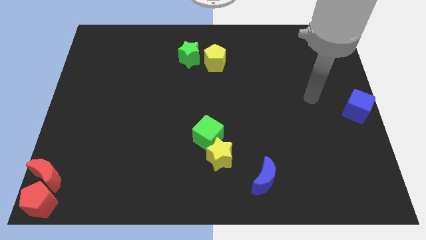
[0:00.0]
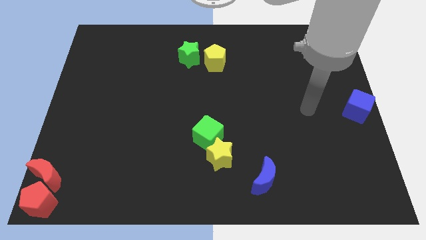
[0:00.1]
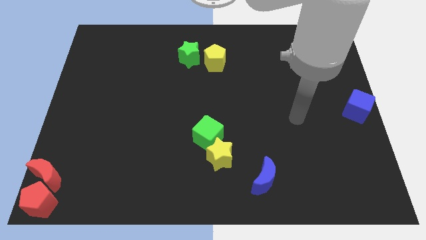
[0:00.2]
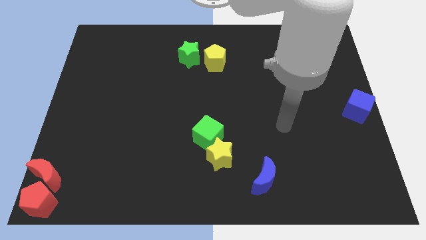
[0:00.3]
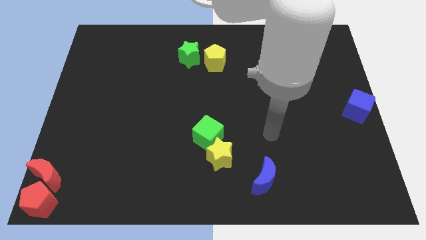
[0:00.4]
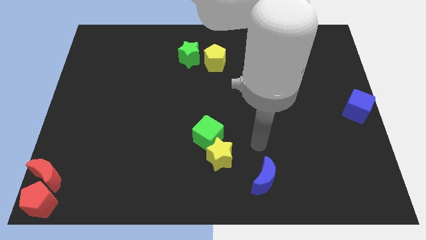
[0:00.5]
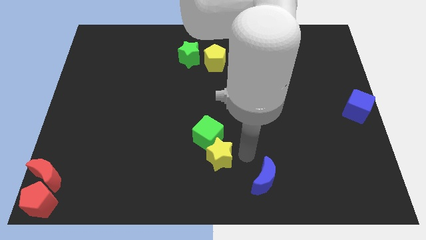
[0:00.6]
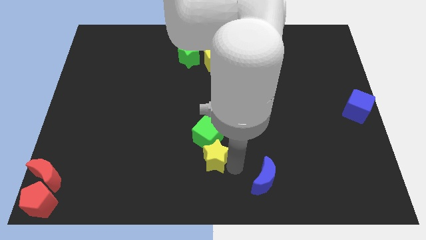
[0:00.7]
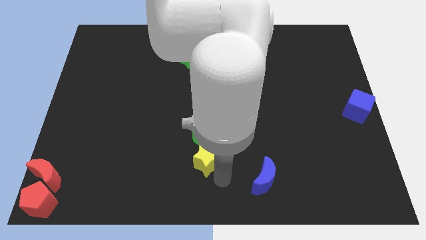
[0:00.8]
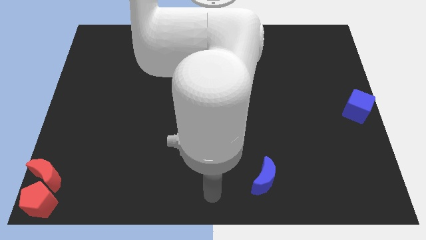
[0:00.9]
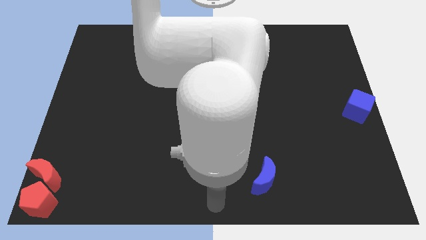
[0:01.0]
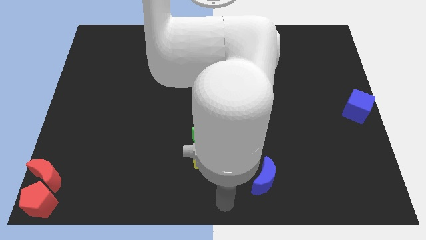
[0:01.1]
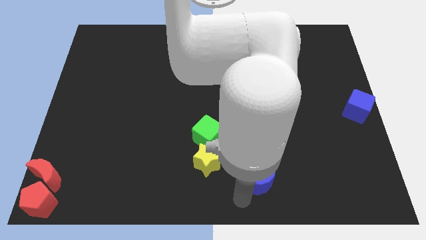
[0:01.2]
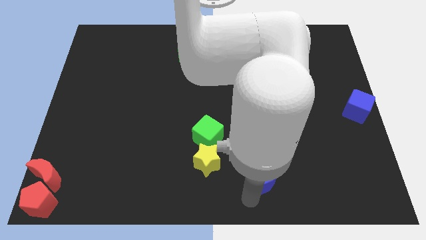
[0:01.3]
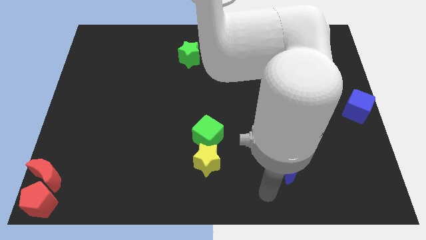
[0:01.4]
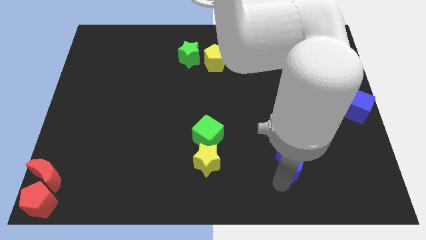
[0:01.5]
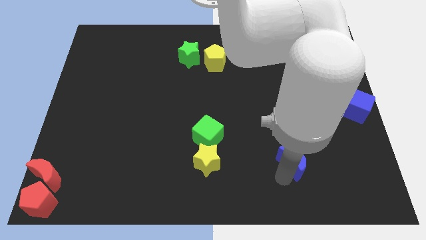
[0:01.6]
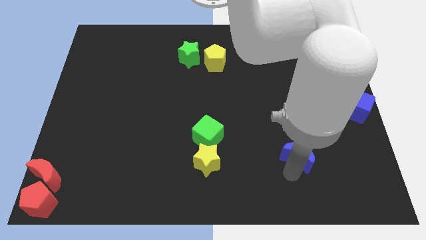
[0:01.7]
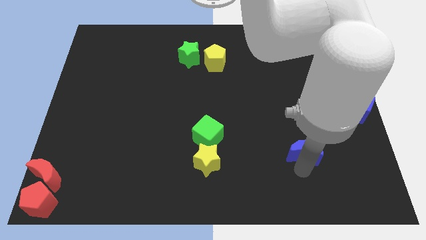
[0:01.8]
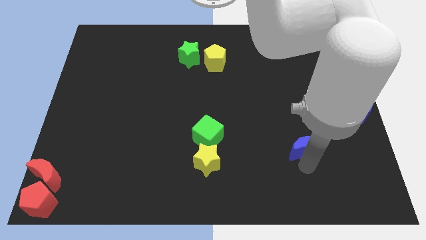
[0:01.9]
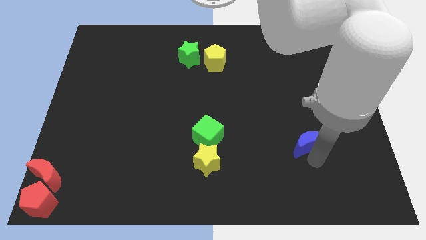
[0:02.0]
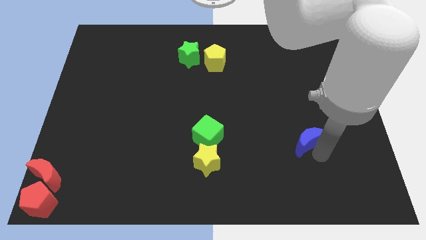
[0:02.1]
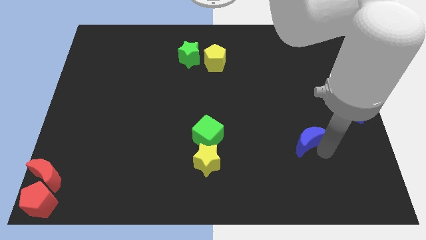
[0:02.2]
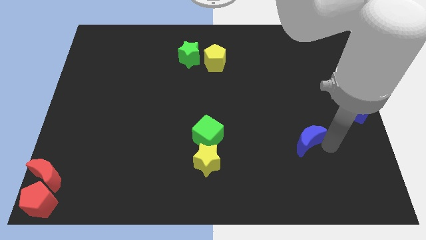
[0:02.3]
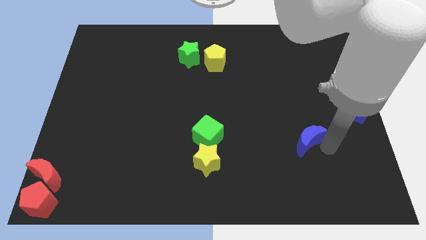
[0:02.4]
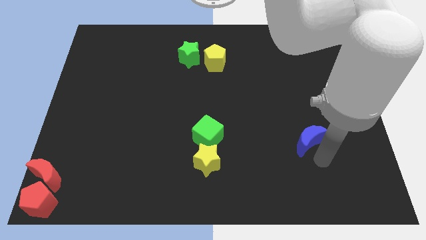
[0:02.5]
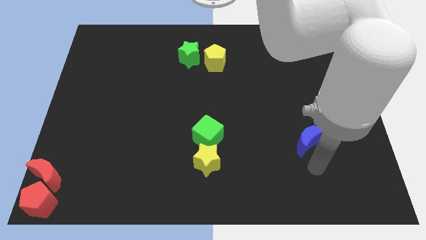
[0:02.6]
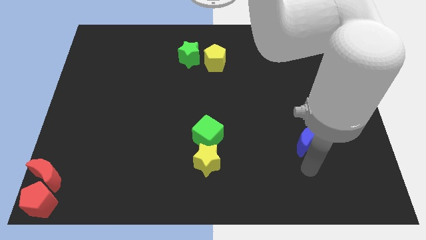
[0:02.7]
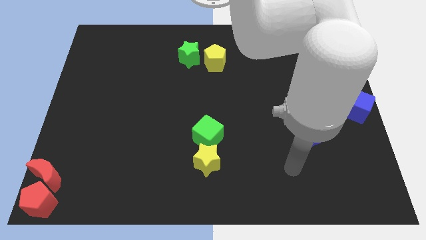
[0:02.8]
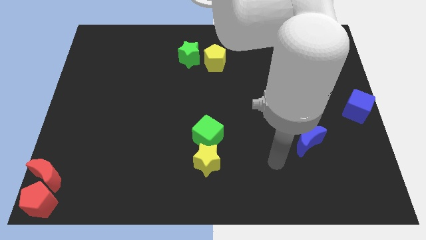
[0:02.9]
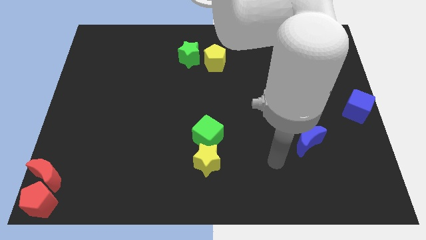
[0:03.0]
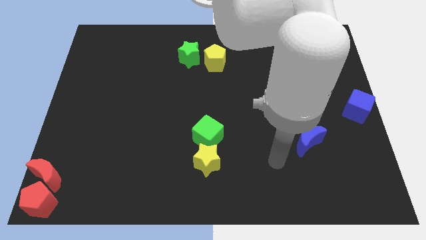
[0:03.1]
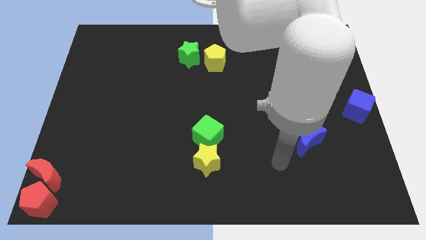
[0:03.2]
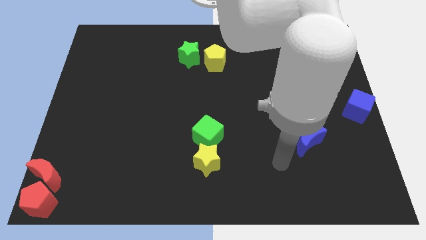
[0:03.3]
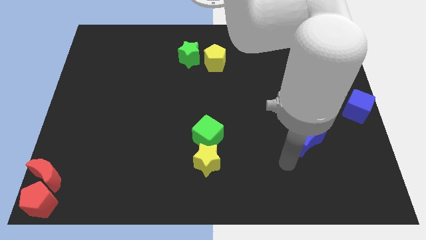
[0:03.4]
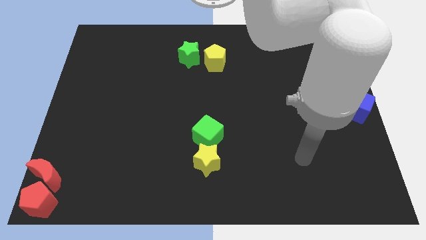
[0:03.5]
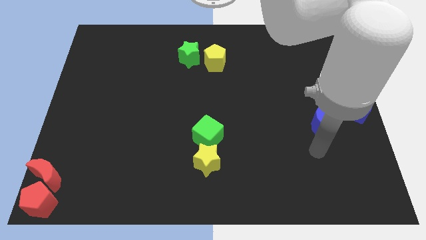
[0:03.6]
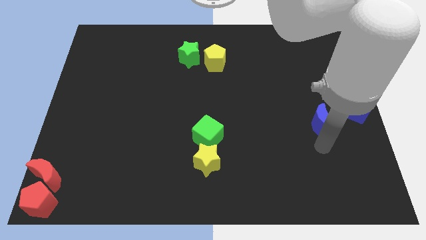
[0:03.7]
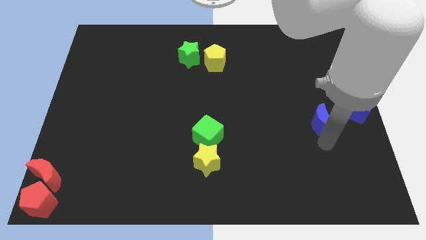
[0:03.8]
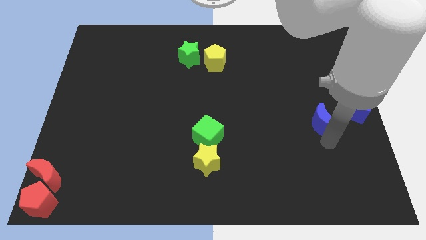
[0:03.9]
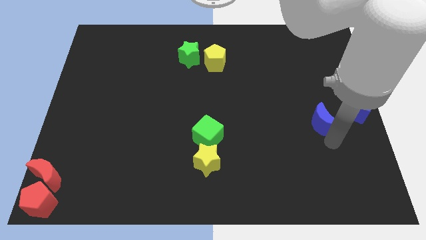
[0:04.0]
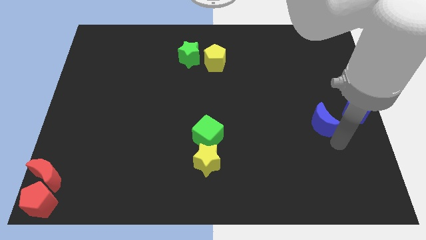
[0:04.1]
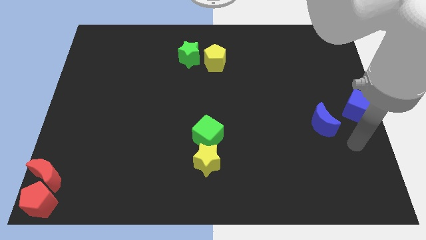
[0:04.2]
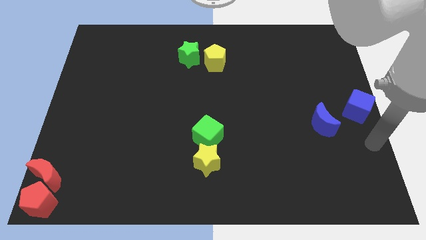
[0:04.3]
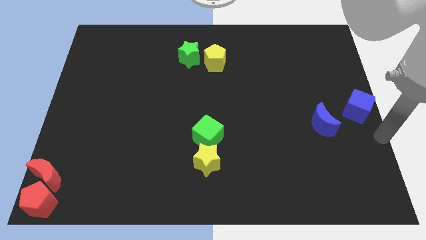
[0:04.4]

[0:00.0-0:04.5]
move the blue crescent towards the left of the blue cube

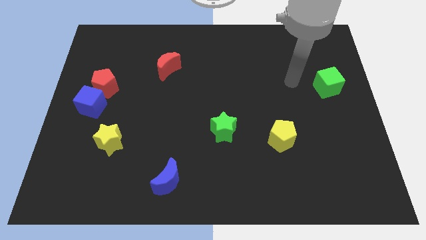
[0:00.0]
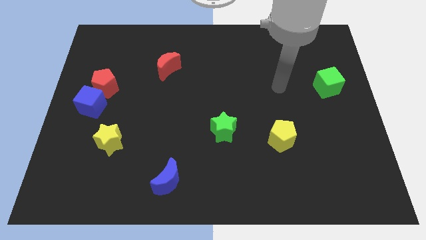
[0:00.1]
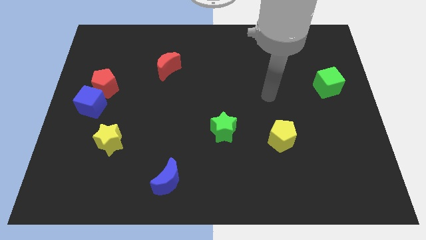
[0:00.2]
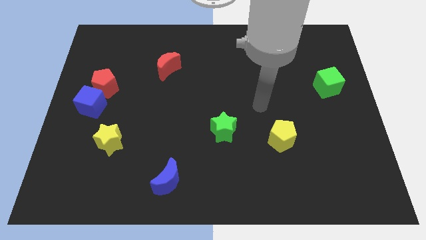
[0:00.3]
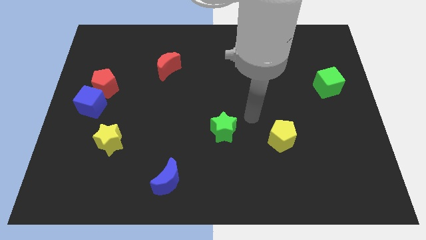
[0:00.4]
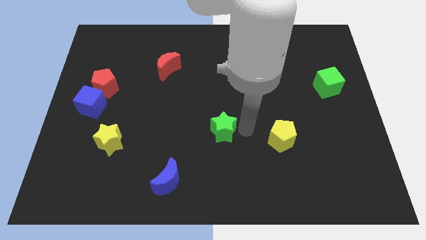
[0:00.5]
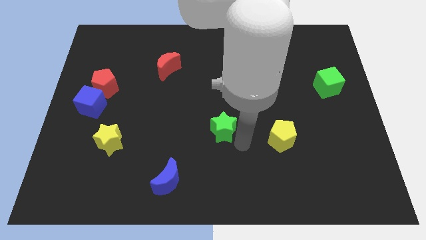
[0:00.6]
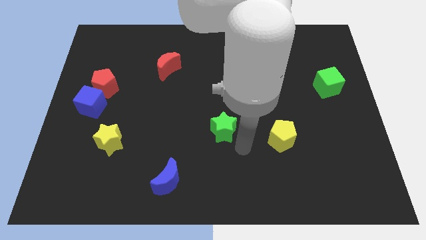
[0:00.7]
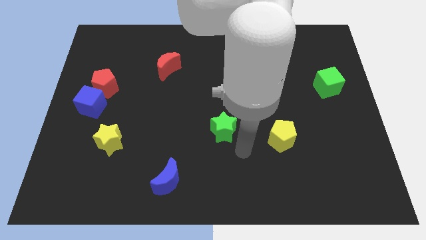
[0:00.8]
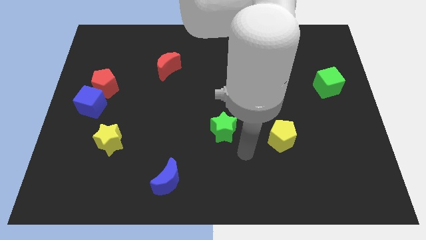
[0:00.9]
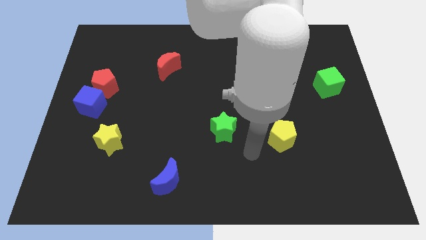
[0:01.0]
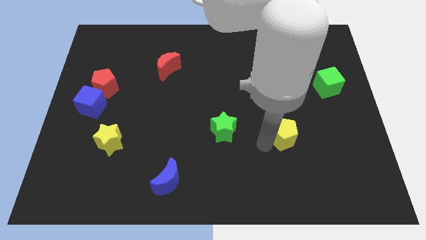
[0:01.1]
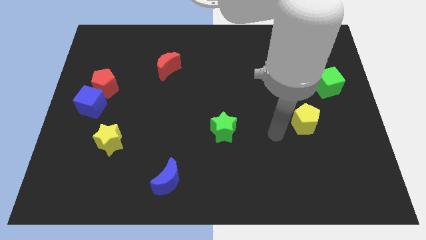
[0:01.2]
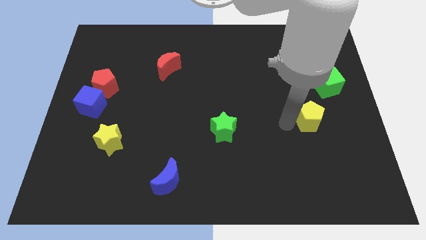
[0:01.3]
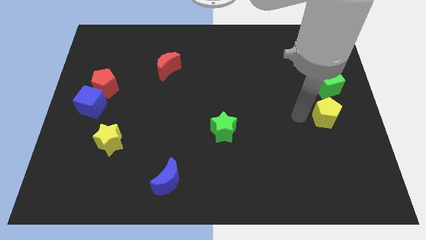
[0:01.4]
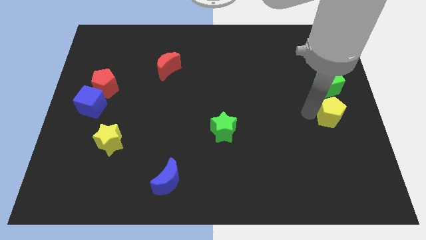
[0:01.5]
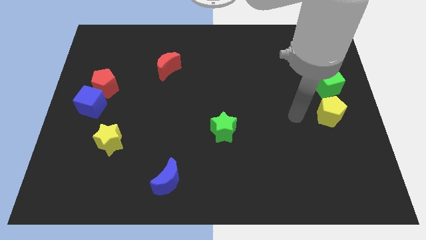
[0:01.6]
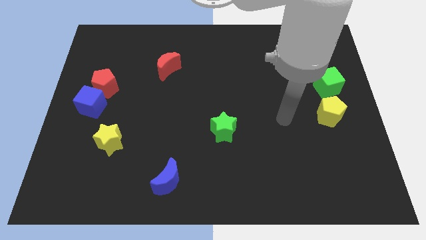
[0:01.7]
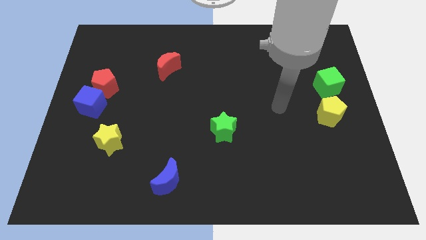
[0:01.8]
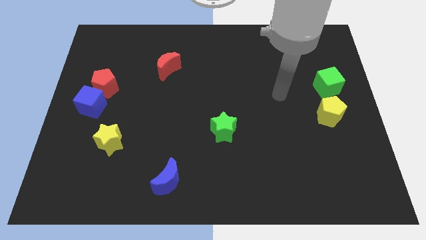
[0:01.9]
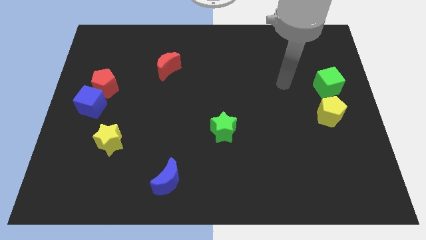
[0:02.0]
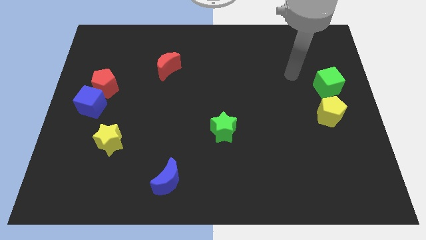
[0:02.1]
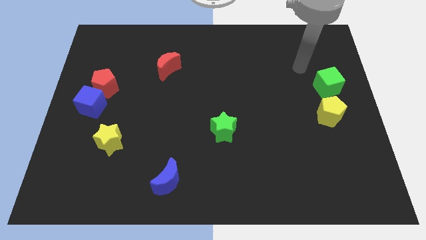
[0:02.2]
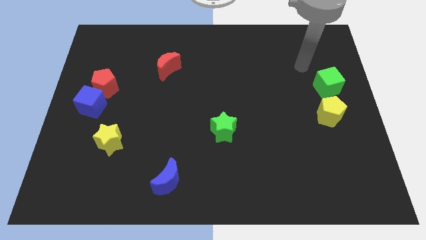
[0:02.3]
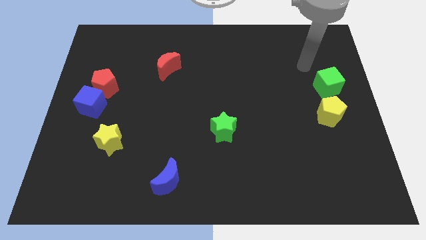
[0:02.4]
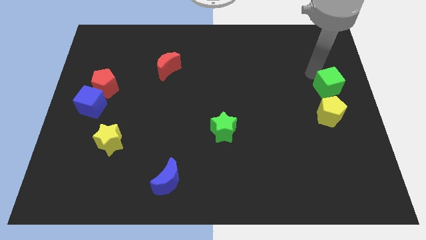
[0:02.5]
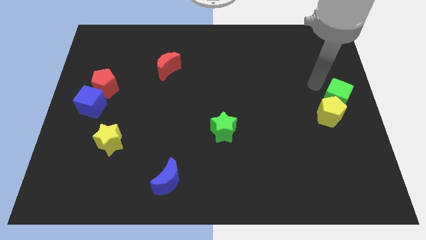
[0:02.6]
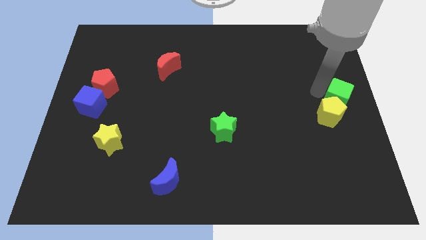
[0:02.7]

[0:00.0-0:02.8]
push the yellow pentagon to the bottom of the green cube

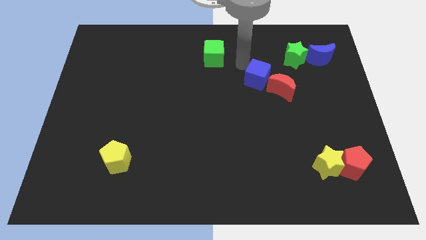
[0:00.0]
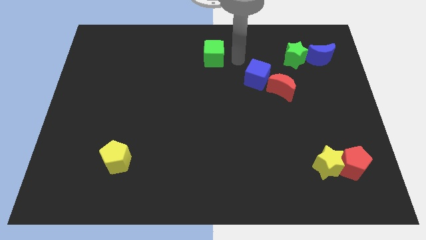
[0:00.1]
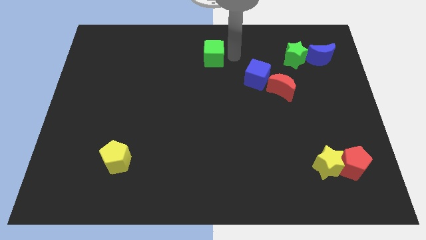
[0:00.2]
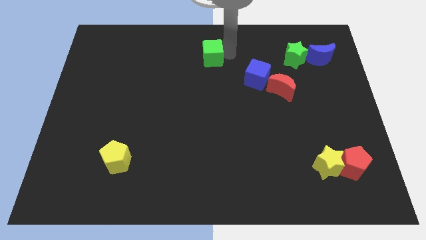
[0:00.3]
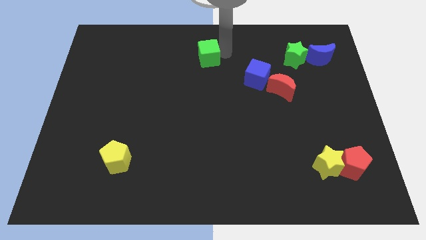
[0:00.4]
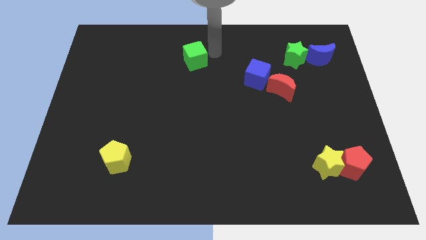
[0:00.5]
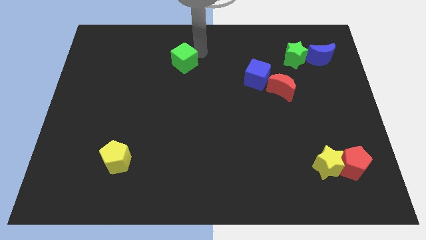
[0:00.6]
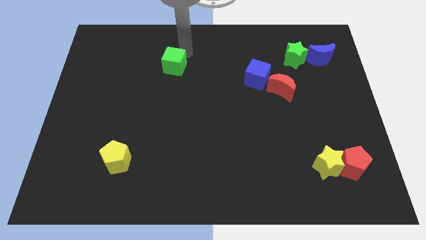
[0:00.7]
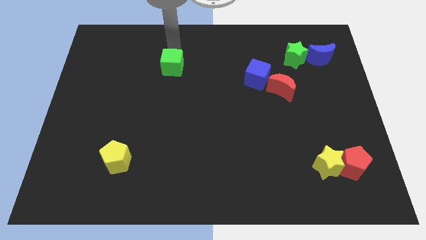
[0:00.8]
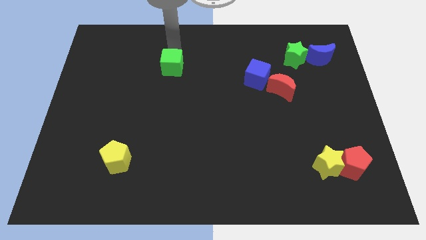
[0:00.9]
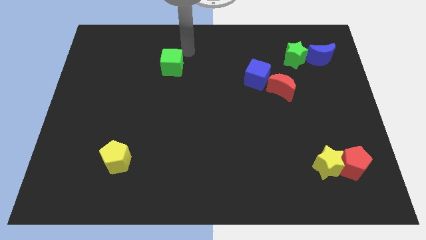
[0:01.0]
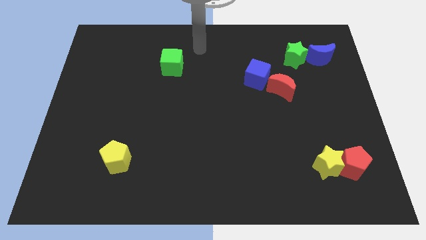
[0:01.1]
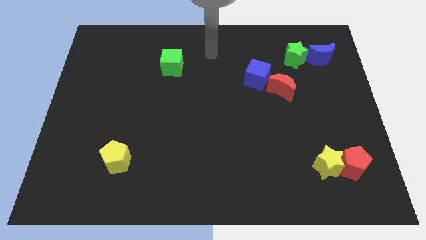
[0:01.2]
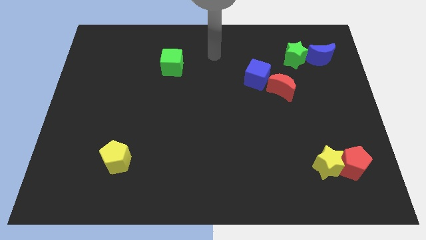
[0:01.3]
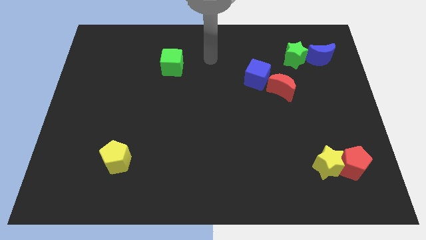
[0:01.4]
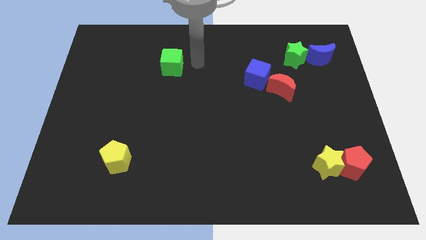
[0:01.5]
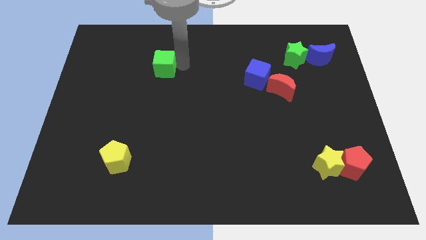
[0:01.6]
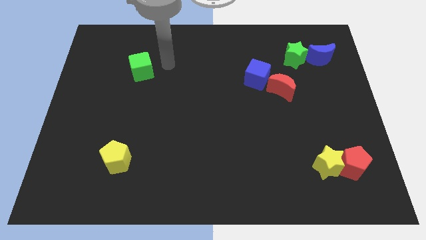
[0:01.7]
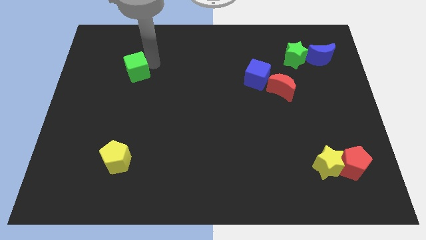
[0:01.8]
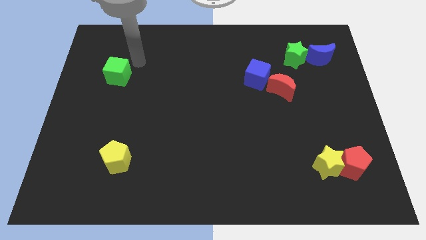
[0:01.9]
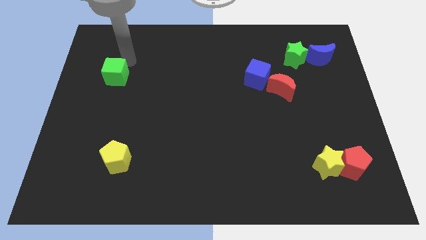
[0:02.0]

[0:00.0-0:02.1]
place the green cube towards center left to the board
